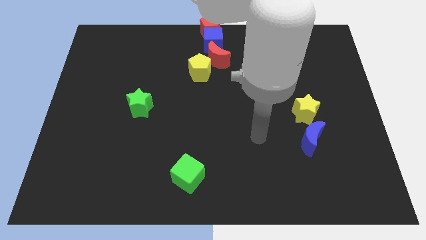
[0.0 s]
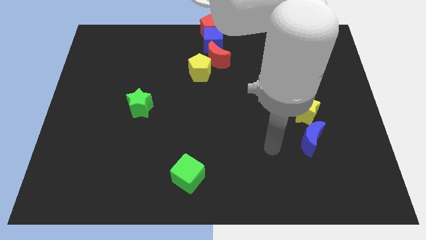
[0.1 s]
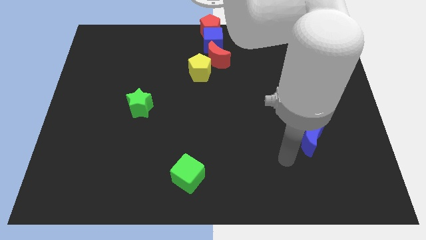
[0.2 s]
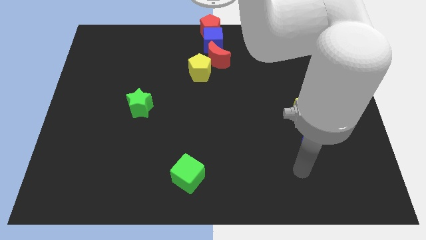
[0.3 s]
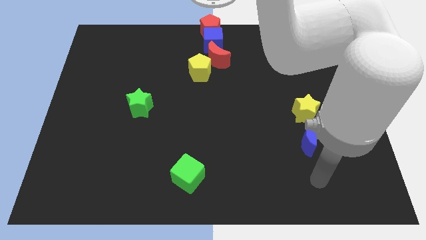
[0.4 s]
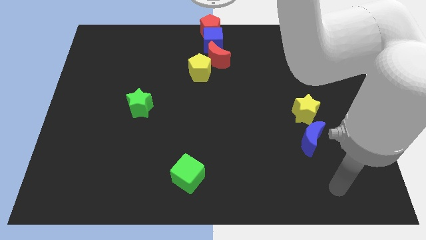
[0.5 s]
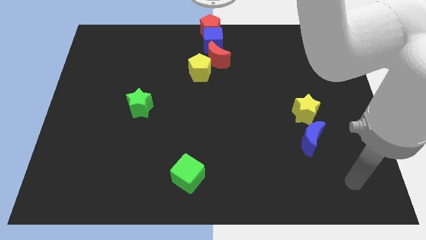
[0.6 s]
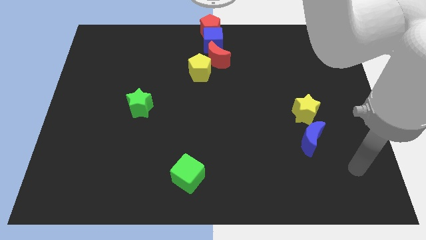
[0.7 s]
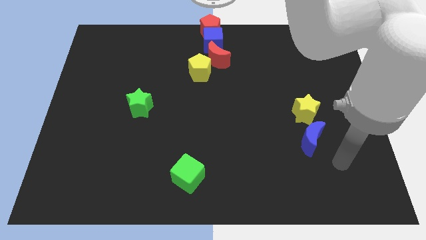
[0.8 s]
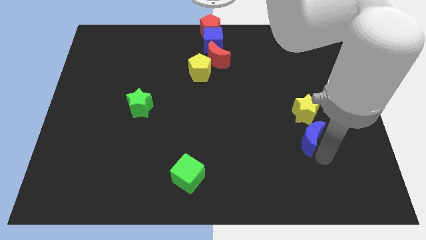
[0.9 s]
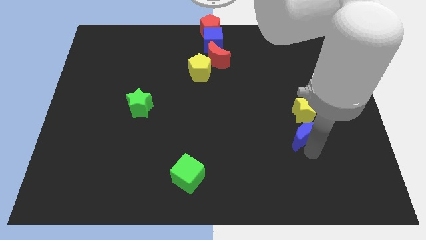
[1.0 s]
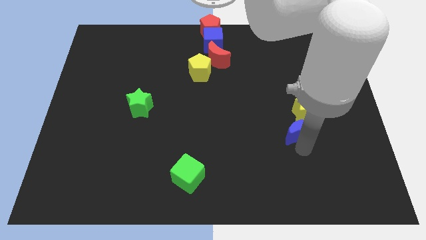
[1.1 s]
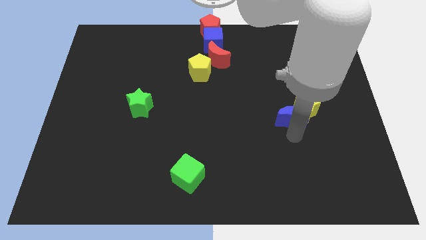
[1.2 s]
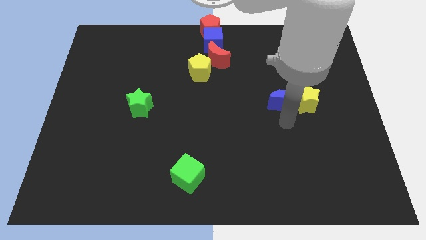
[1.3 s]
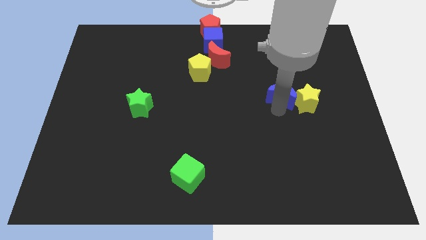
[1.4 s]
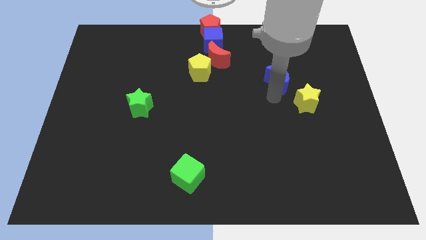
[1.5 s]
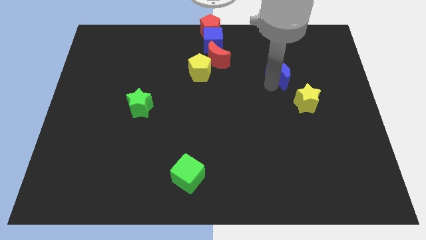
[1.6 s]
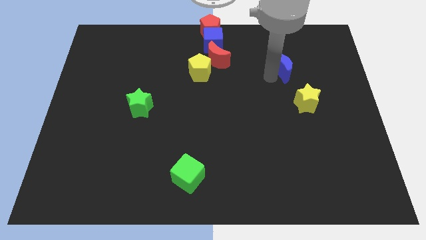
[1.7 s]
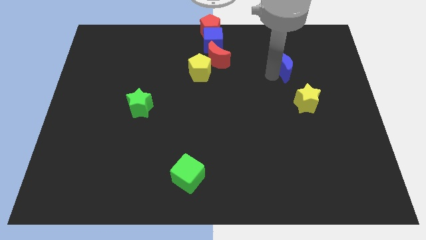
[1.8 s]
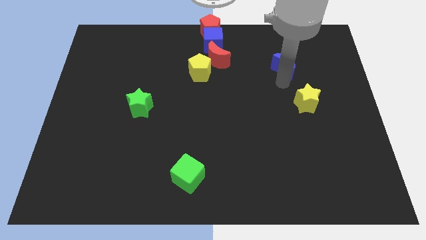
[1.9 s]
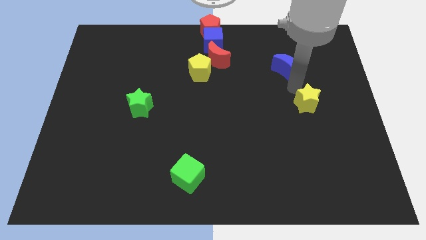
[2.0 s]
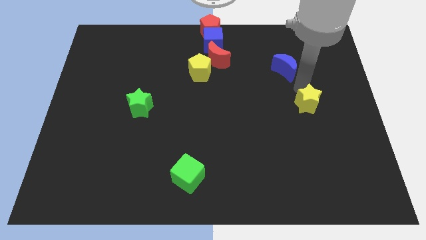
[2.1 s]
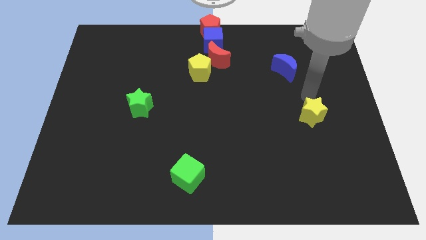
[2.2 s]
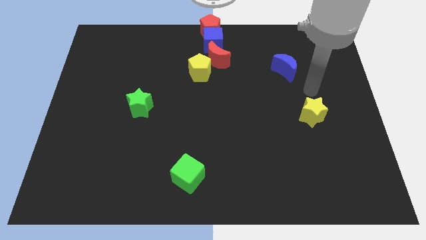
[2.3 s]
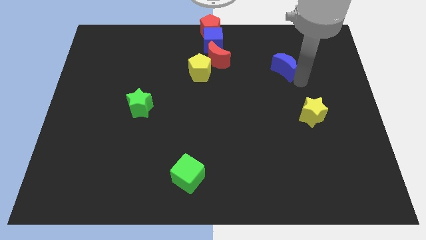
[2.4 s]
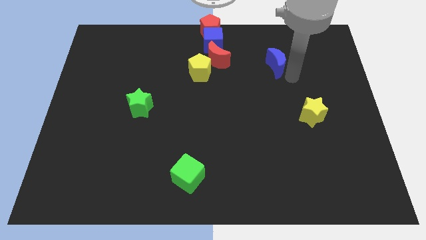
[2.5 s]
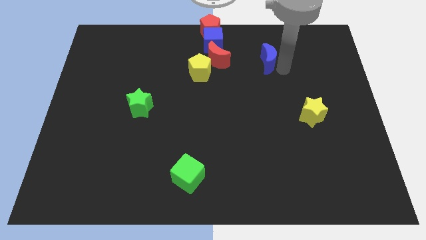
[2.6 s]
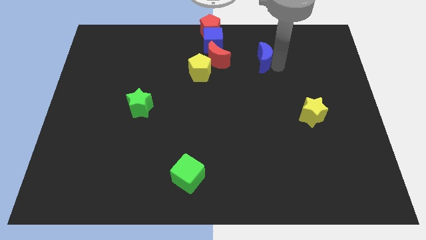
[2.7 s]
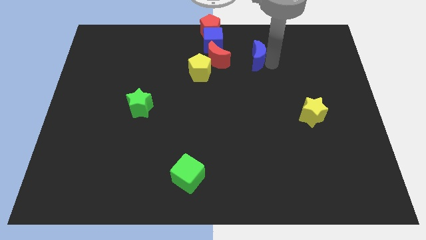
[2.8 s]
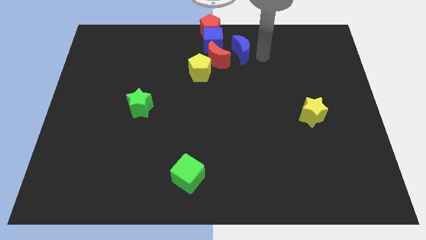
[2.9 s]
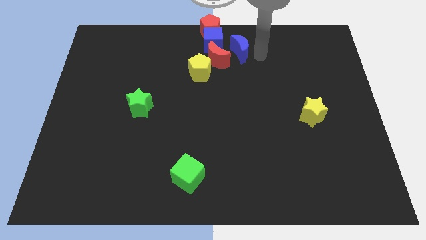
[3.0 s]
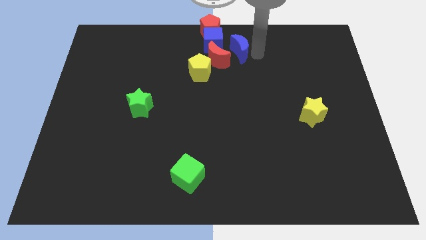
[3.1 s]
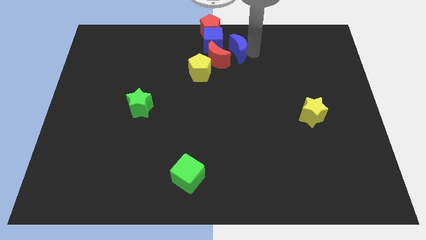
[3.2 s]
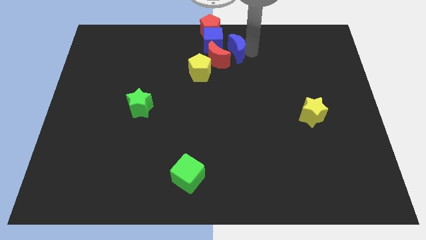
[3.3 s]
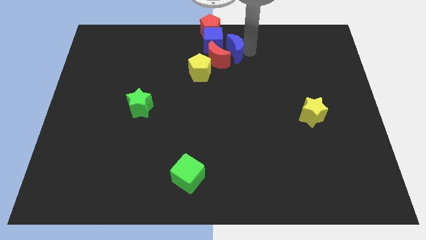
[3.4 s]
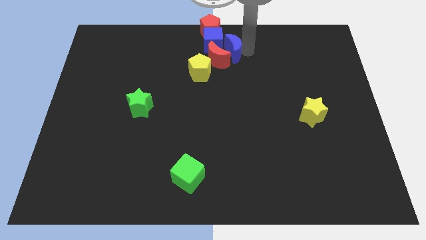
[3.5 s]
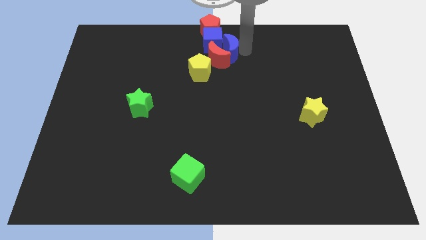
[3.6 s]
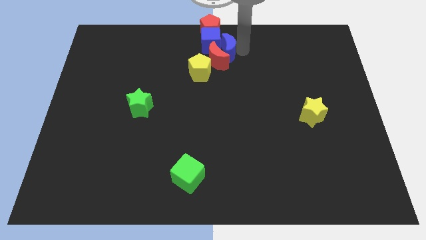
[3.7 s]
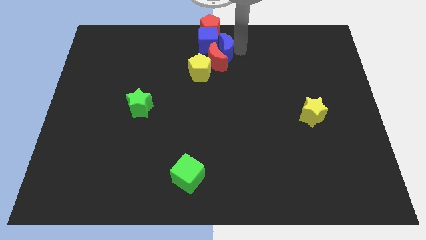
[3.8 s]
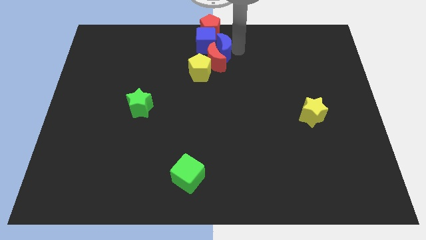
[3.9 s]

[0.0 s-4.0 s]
push the blue crescent to the right of the blue cube

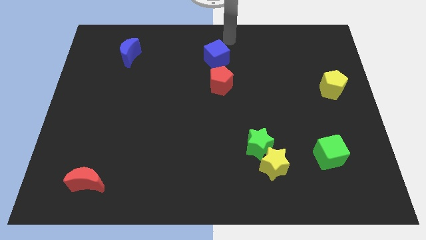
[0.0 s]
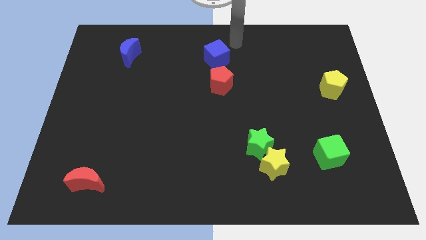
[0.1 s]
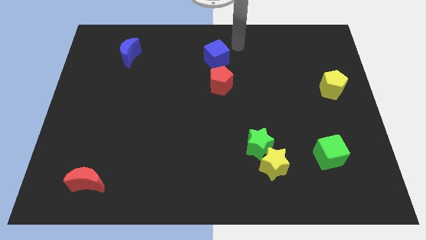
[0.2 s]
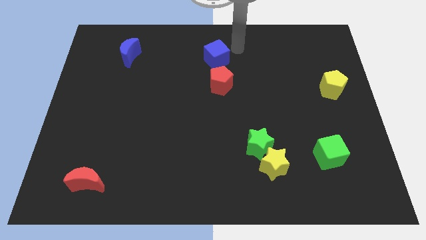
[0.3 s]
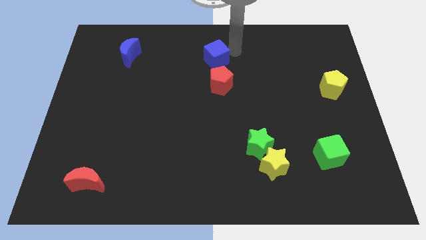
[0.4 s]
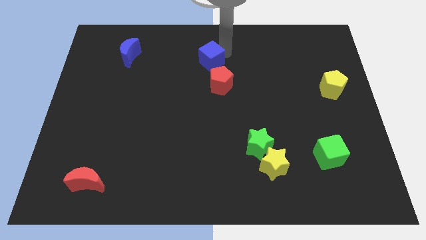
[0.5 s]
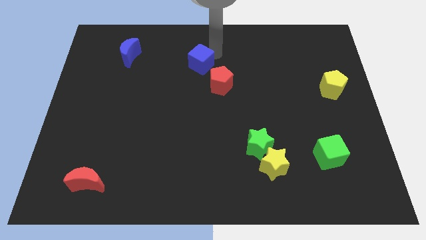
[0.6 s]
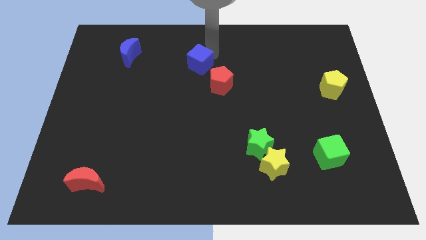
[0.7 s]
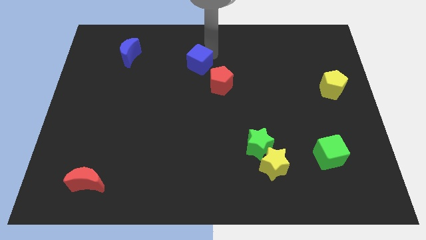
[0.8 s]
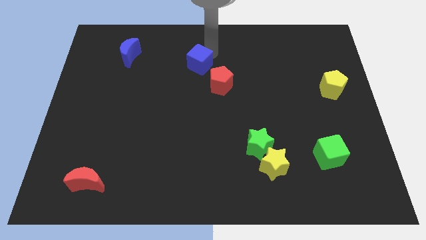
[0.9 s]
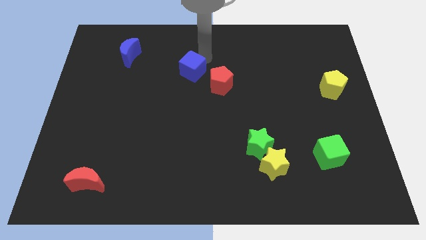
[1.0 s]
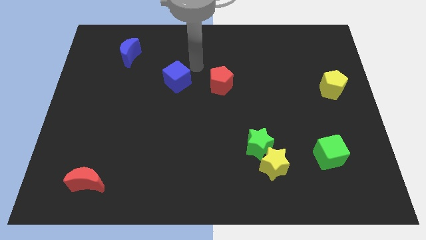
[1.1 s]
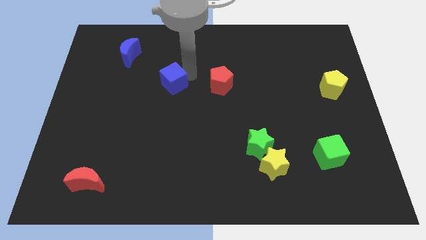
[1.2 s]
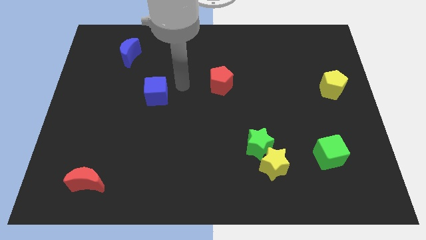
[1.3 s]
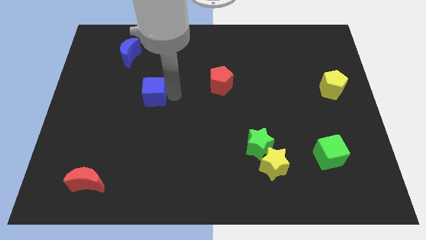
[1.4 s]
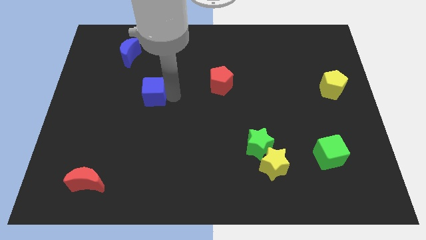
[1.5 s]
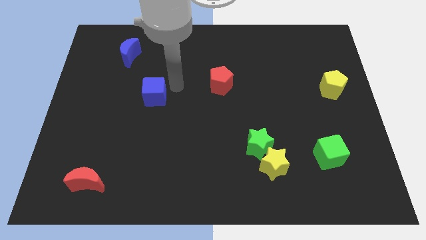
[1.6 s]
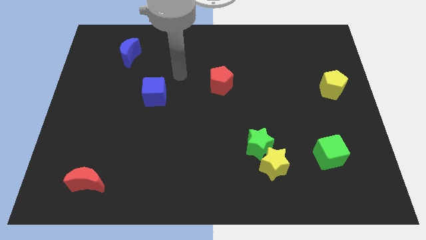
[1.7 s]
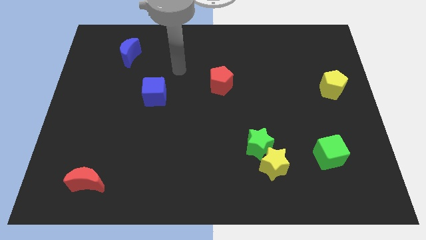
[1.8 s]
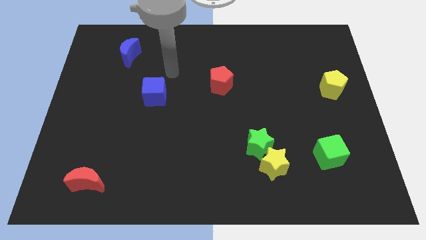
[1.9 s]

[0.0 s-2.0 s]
place the blue cube diagonally to the blue moon

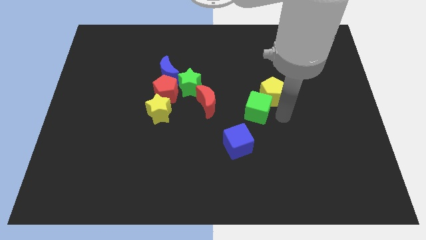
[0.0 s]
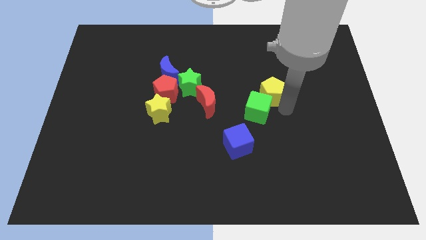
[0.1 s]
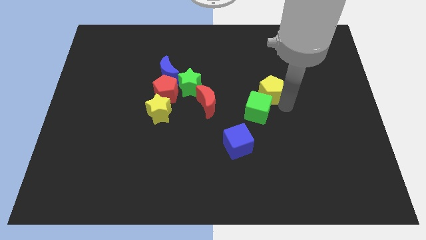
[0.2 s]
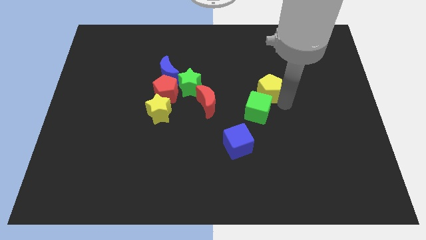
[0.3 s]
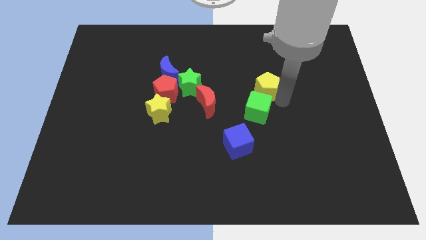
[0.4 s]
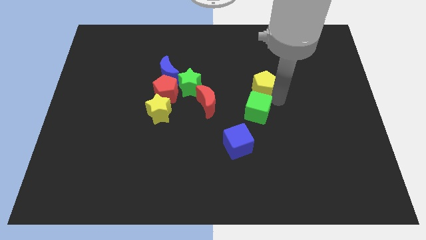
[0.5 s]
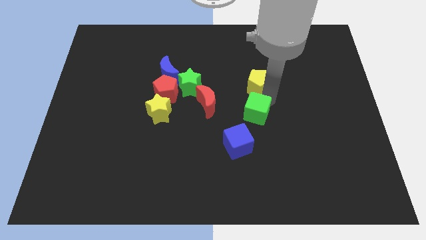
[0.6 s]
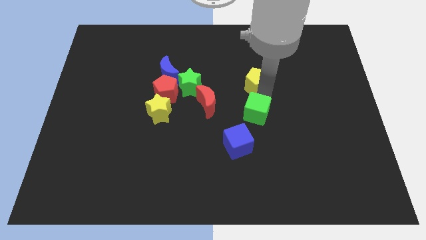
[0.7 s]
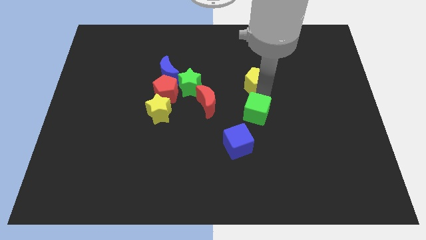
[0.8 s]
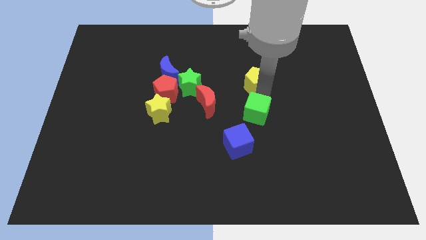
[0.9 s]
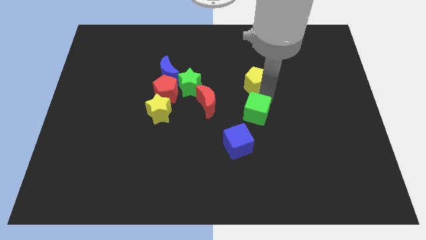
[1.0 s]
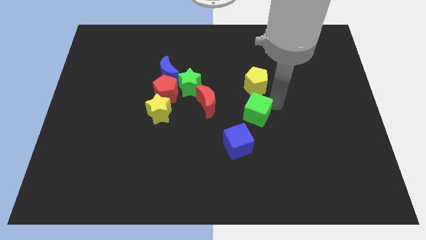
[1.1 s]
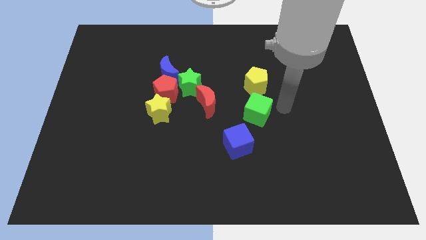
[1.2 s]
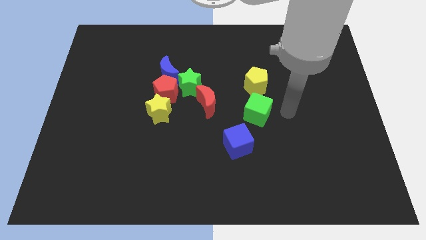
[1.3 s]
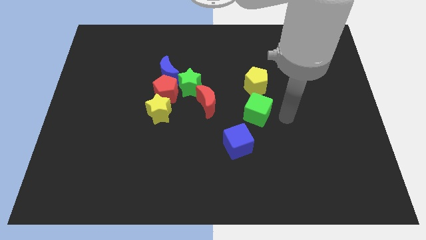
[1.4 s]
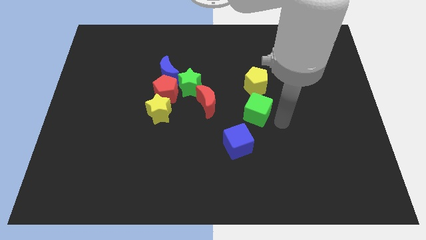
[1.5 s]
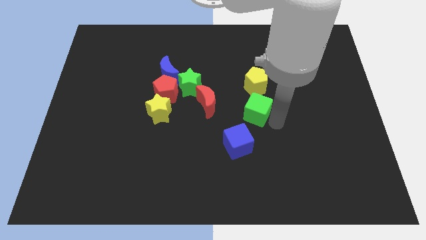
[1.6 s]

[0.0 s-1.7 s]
separate green cube and yellow pentagon

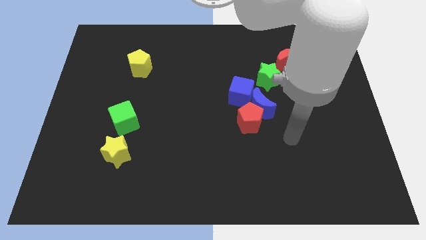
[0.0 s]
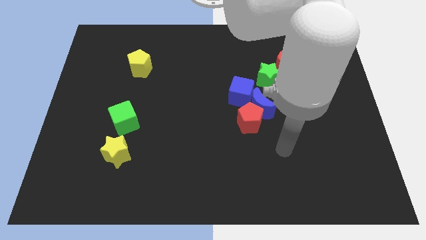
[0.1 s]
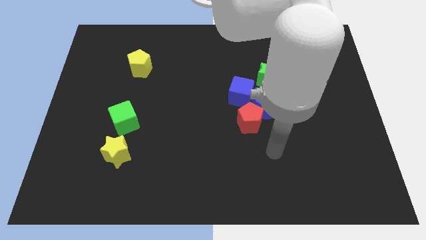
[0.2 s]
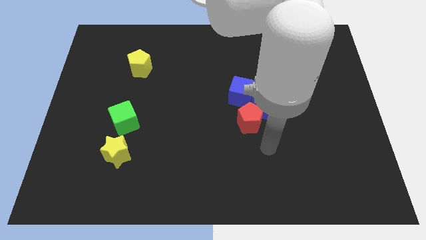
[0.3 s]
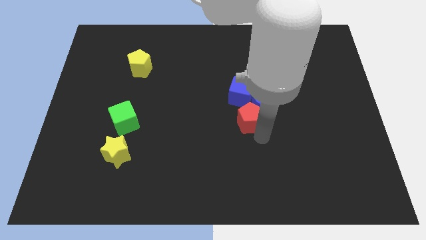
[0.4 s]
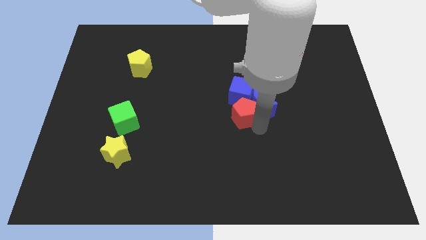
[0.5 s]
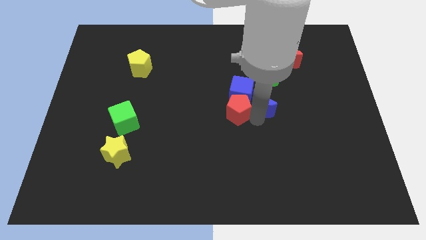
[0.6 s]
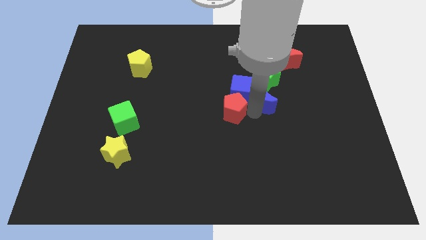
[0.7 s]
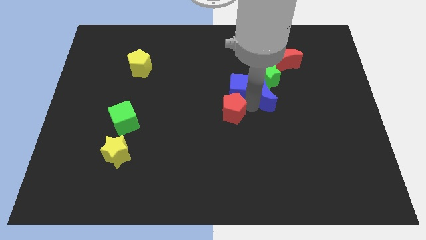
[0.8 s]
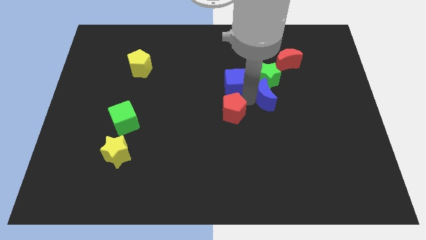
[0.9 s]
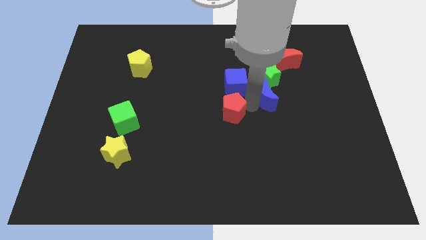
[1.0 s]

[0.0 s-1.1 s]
place your arm in between red pentagon and blue moon

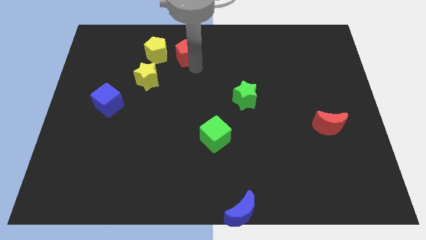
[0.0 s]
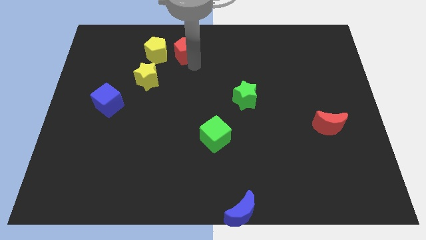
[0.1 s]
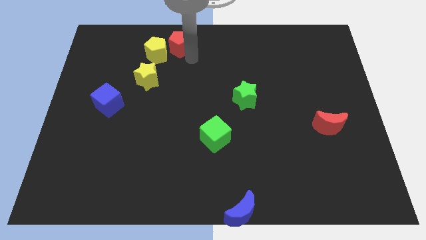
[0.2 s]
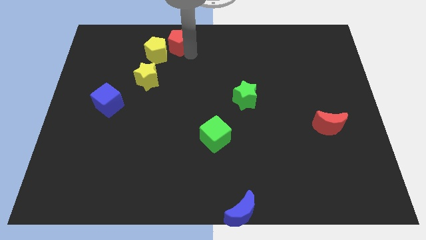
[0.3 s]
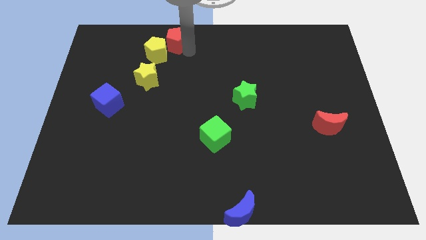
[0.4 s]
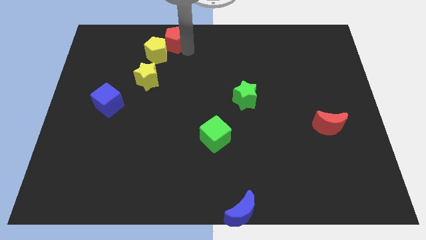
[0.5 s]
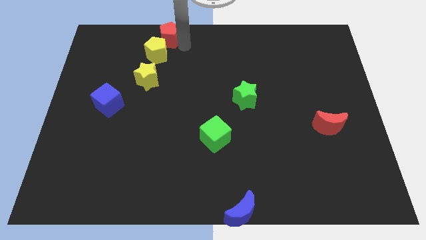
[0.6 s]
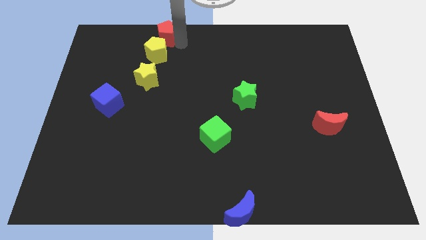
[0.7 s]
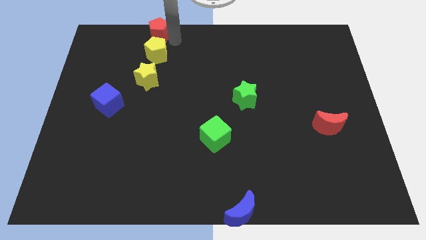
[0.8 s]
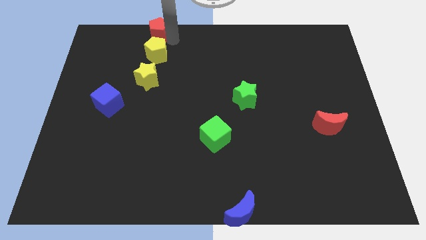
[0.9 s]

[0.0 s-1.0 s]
place red pentagon above yellow pentagon
